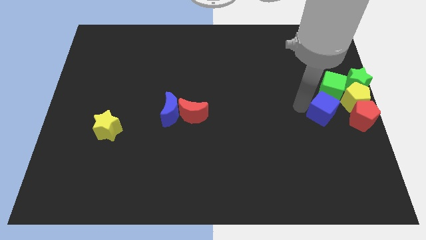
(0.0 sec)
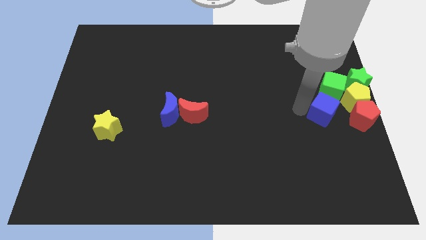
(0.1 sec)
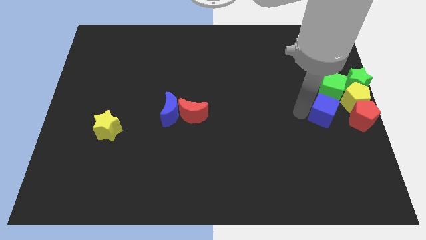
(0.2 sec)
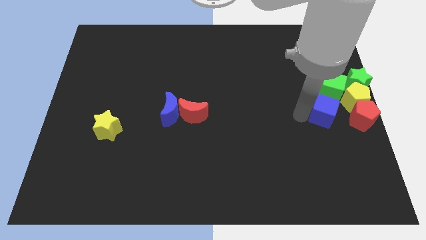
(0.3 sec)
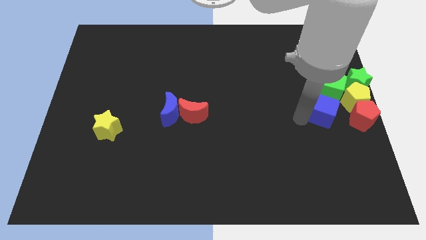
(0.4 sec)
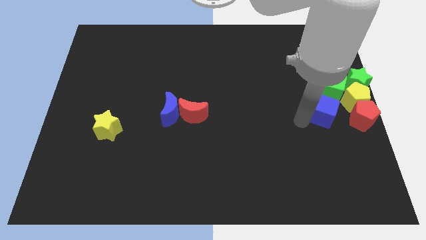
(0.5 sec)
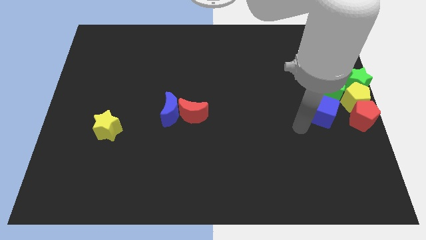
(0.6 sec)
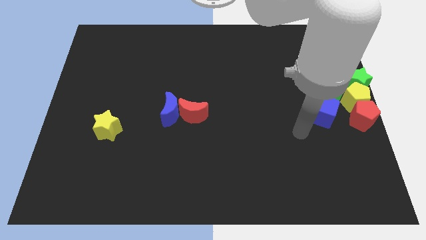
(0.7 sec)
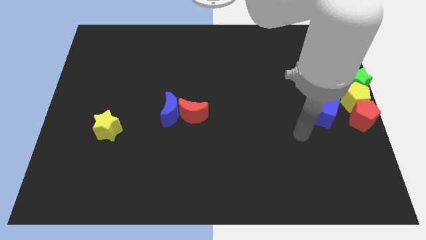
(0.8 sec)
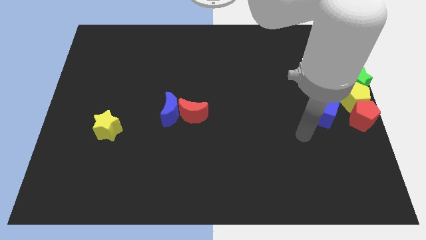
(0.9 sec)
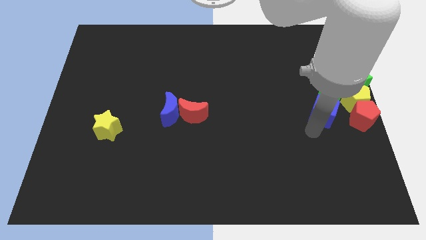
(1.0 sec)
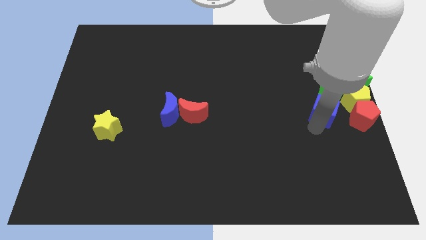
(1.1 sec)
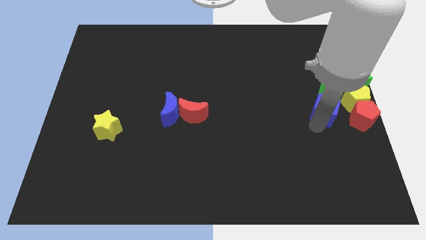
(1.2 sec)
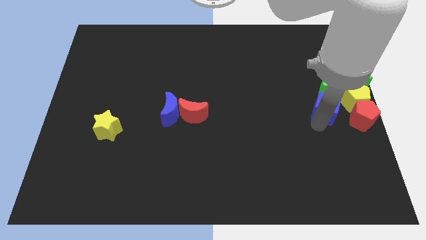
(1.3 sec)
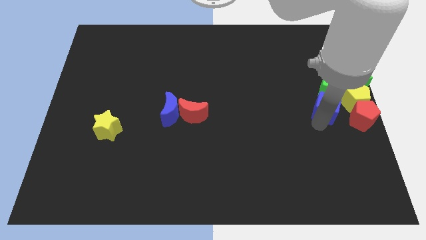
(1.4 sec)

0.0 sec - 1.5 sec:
place the blue cube below the green cube

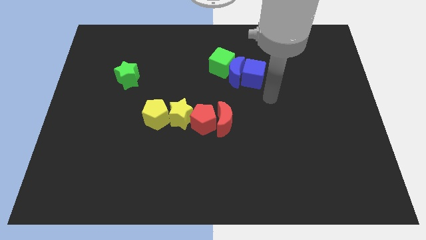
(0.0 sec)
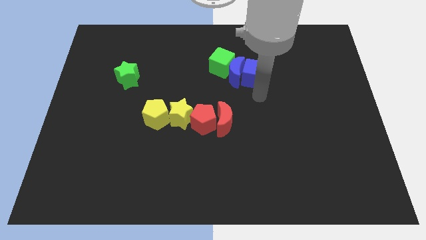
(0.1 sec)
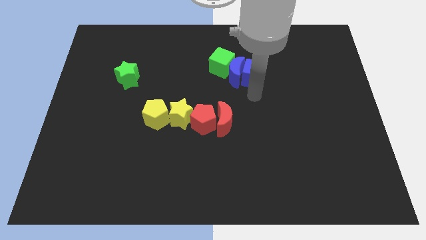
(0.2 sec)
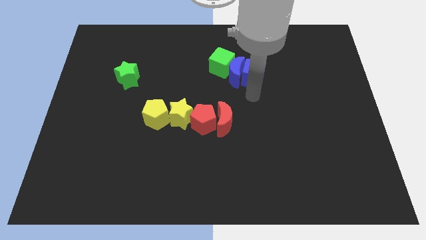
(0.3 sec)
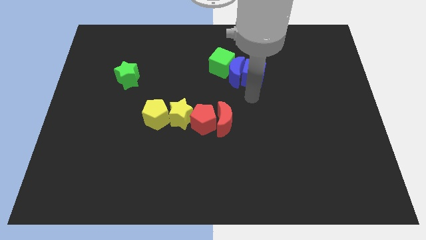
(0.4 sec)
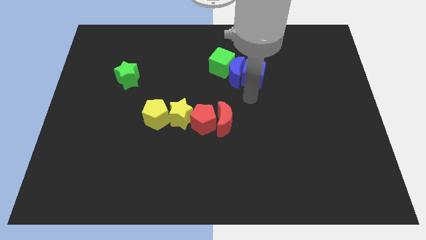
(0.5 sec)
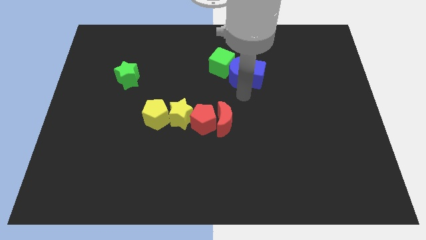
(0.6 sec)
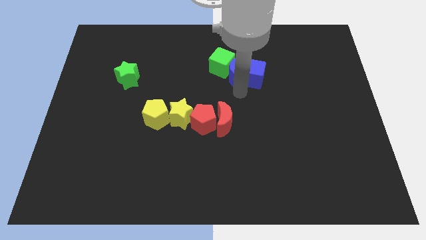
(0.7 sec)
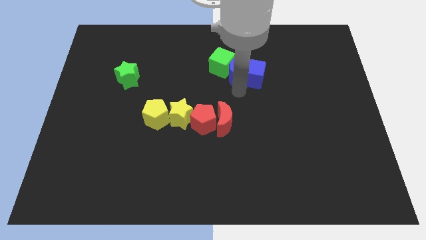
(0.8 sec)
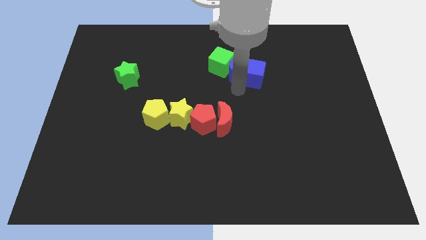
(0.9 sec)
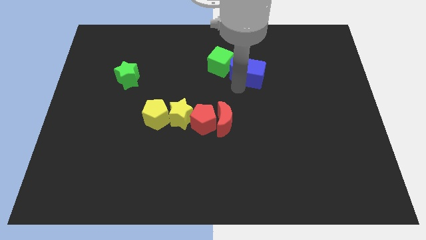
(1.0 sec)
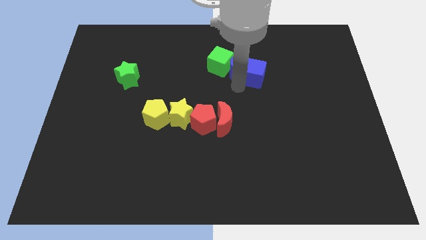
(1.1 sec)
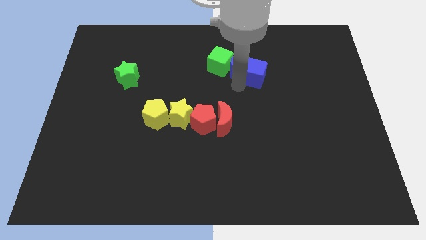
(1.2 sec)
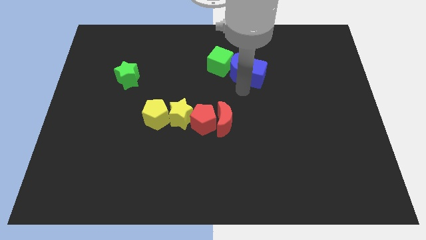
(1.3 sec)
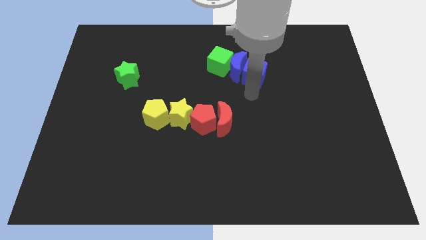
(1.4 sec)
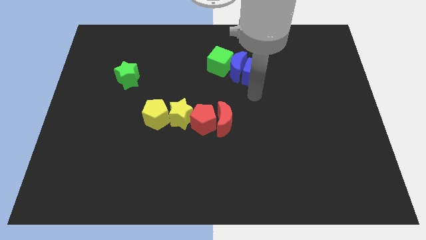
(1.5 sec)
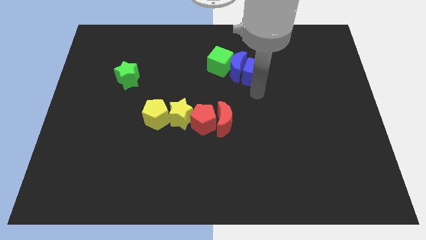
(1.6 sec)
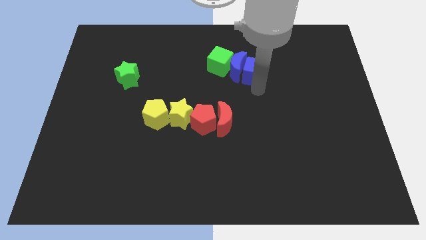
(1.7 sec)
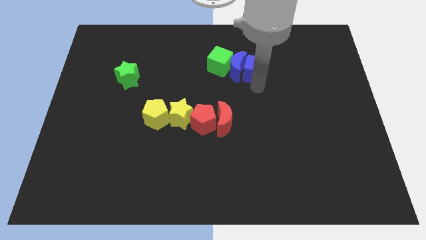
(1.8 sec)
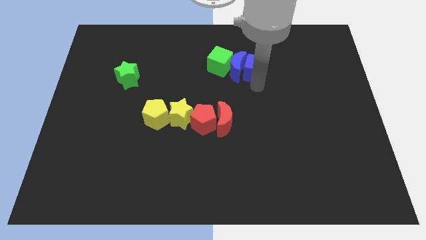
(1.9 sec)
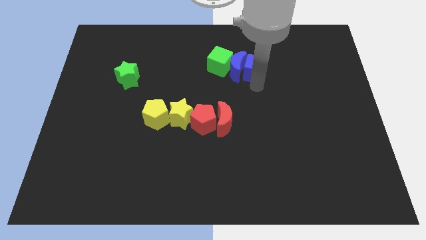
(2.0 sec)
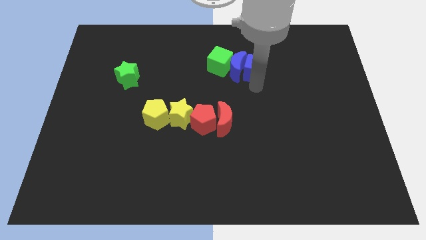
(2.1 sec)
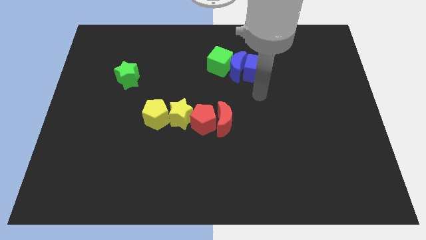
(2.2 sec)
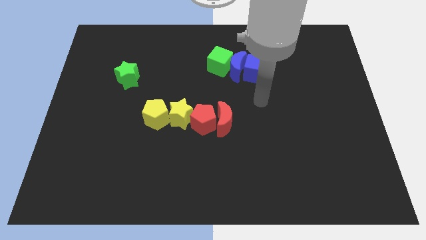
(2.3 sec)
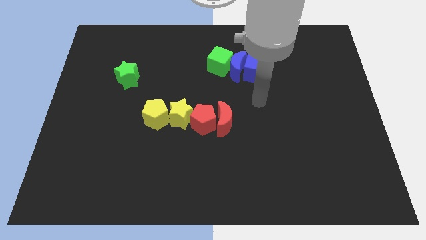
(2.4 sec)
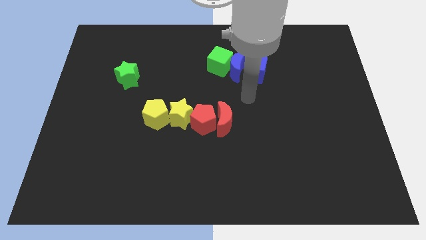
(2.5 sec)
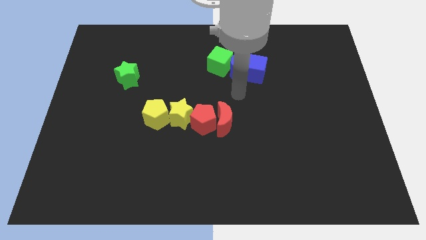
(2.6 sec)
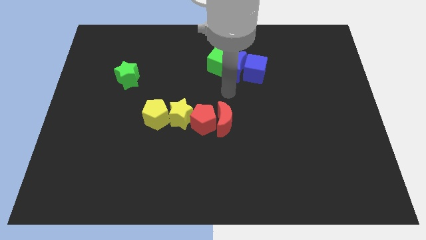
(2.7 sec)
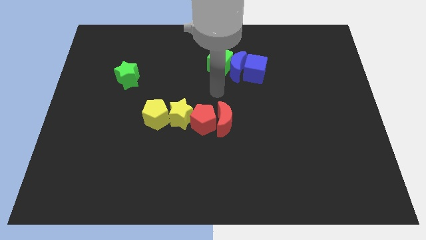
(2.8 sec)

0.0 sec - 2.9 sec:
move the blue cube slightly up to the top center of the board

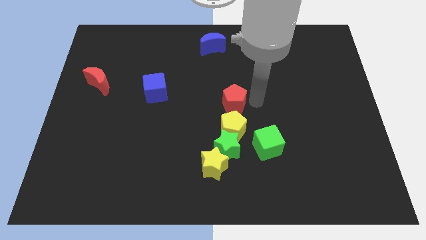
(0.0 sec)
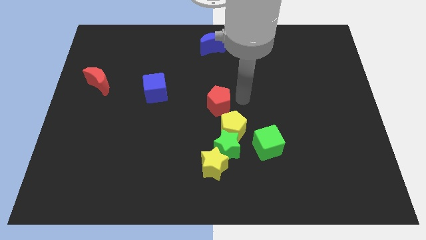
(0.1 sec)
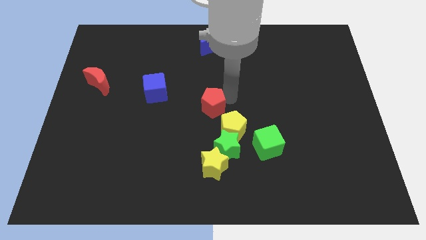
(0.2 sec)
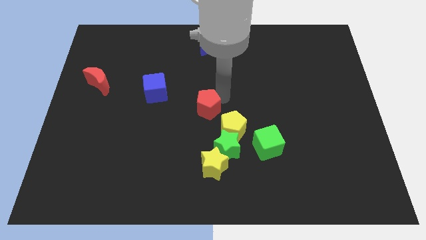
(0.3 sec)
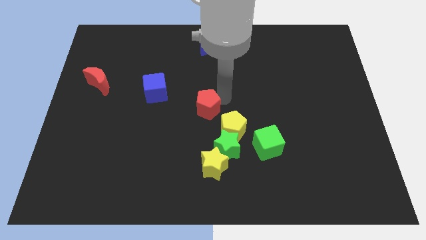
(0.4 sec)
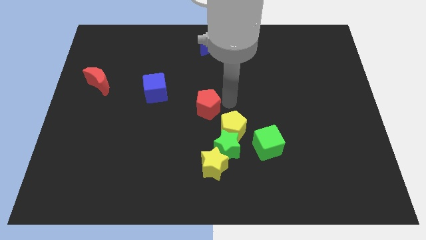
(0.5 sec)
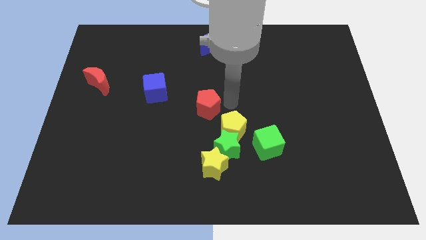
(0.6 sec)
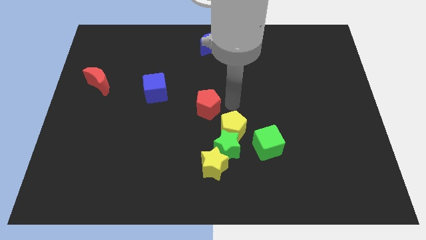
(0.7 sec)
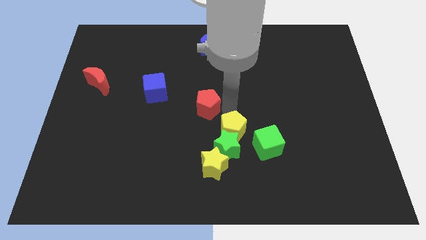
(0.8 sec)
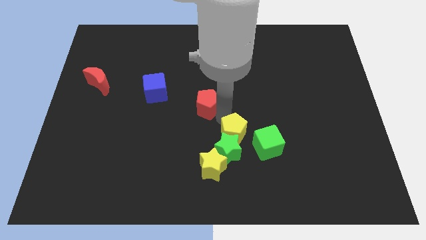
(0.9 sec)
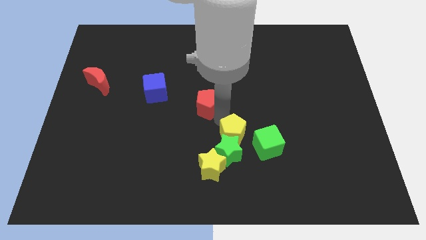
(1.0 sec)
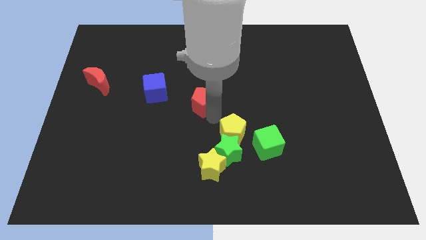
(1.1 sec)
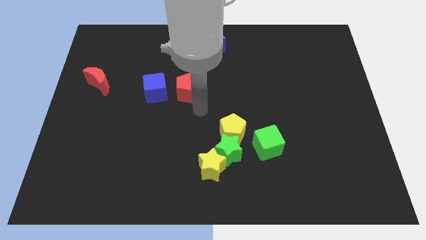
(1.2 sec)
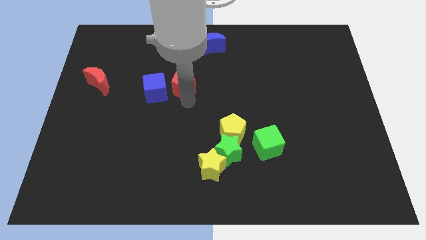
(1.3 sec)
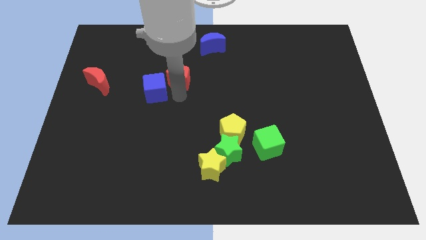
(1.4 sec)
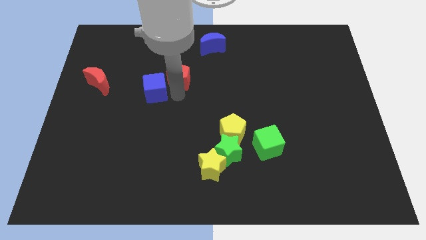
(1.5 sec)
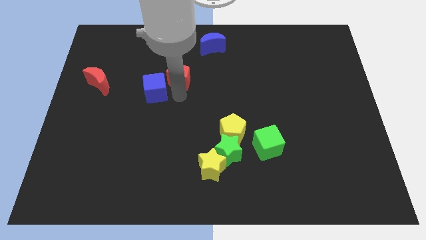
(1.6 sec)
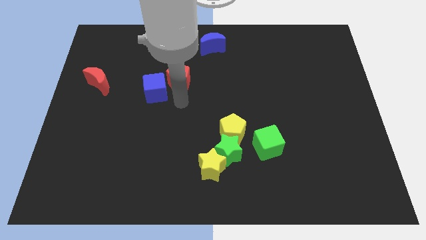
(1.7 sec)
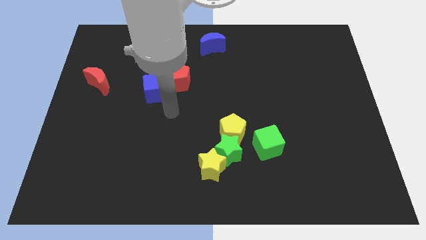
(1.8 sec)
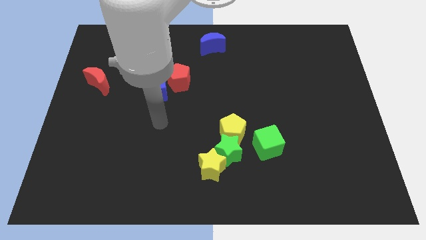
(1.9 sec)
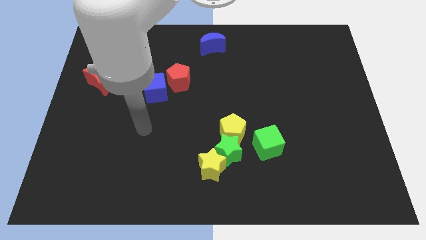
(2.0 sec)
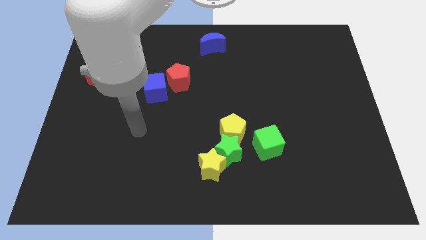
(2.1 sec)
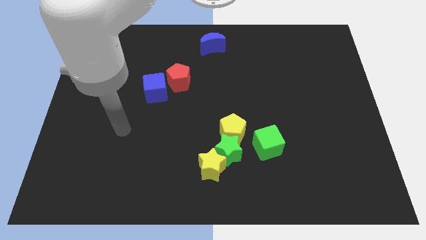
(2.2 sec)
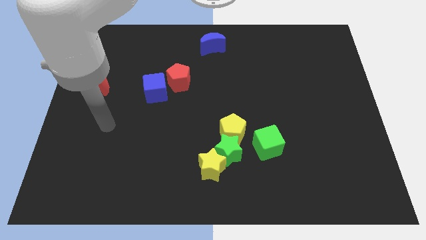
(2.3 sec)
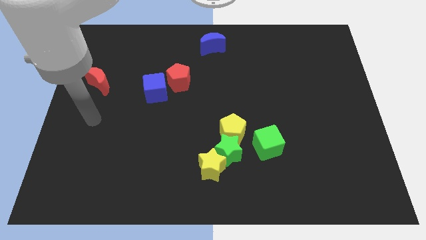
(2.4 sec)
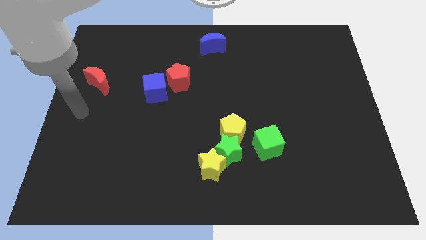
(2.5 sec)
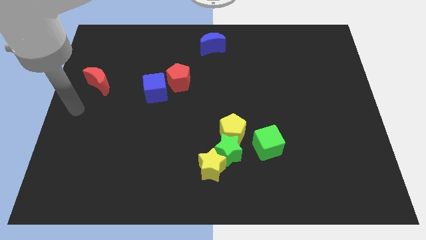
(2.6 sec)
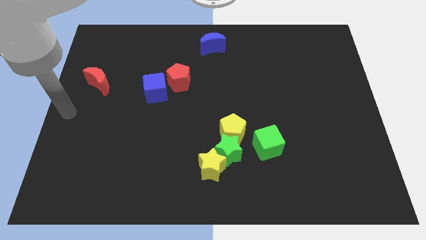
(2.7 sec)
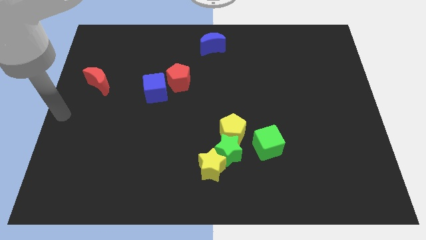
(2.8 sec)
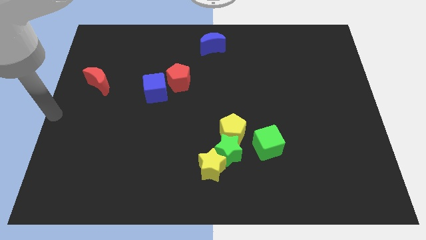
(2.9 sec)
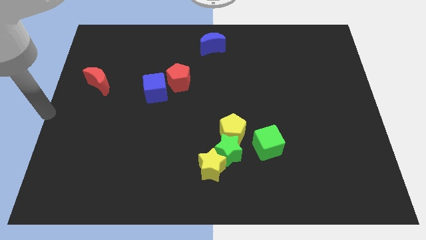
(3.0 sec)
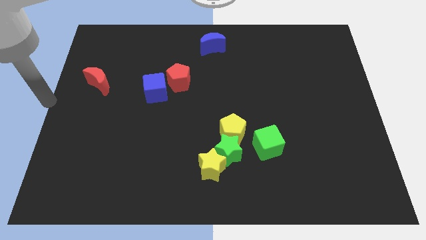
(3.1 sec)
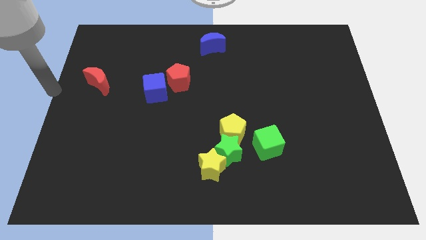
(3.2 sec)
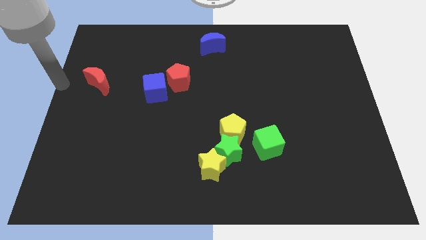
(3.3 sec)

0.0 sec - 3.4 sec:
move the red pentagon diagonally top left to the yellow pentagon

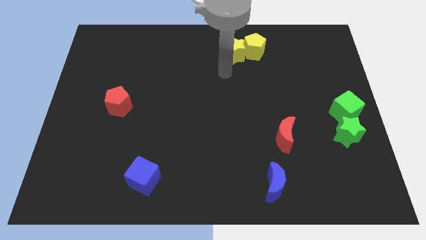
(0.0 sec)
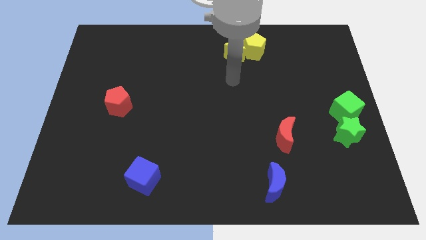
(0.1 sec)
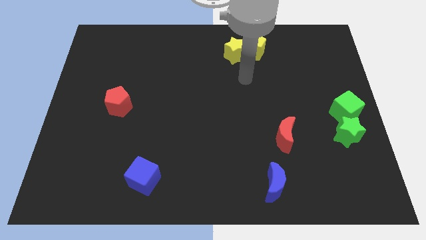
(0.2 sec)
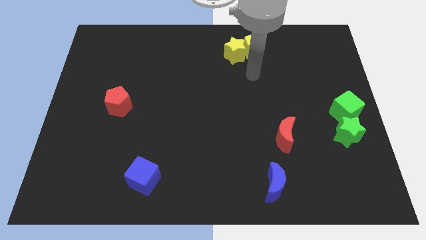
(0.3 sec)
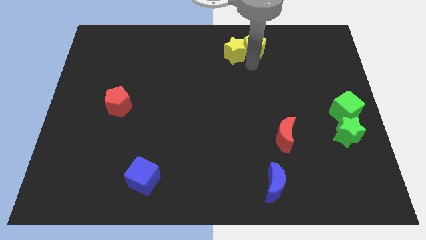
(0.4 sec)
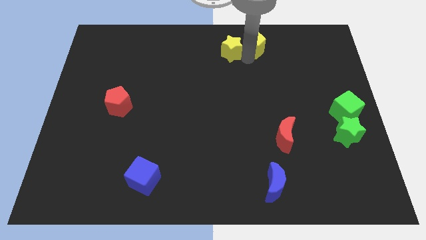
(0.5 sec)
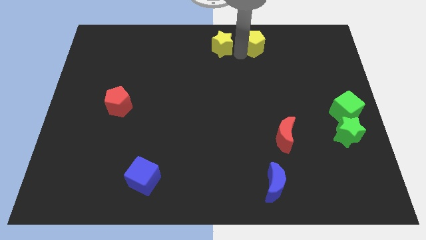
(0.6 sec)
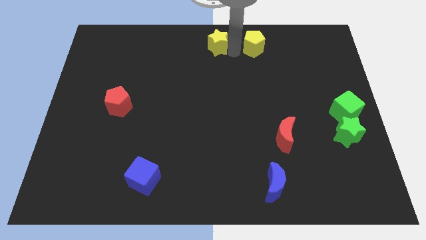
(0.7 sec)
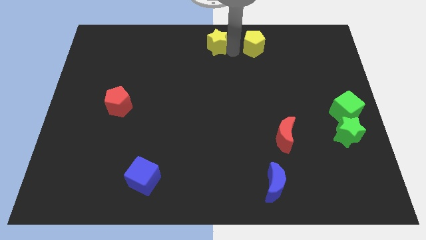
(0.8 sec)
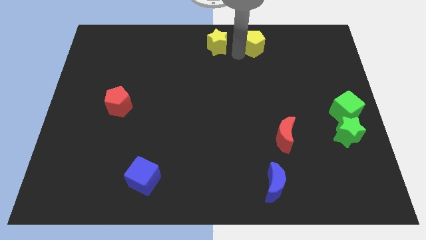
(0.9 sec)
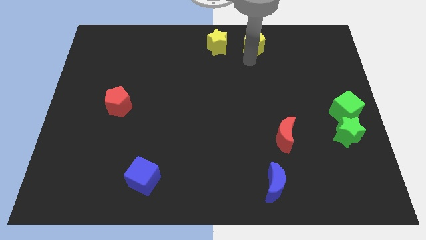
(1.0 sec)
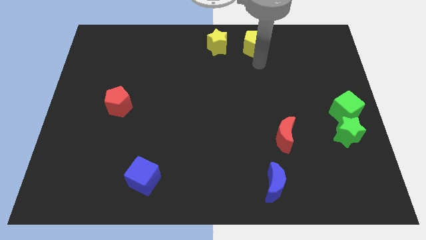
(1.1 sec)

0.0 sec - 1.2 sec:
push the yellow star to the top center of the board
